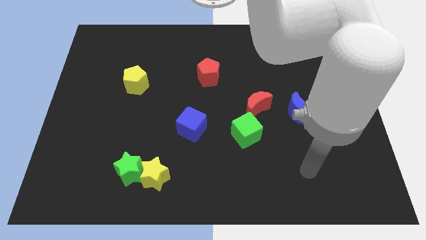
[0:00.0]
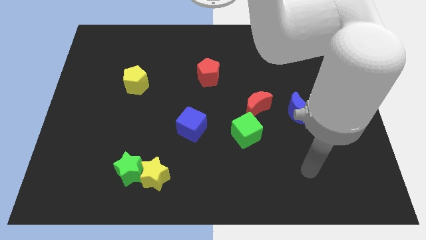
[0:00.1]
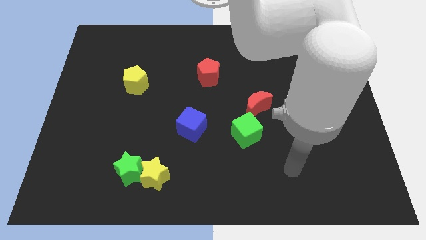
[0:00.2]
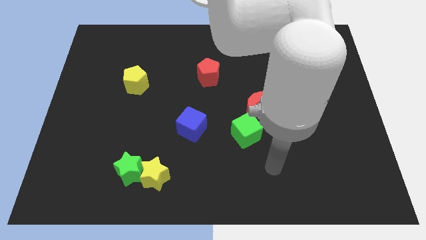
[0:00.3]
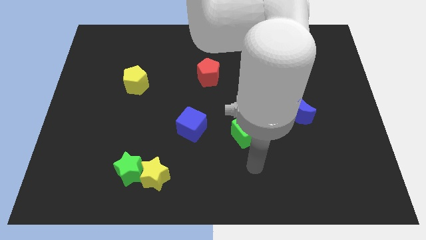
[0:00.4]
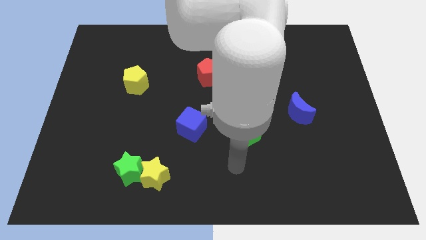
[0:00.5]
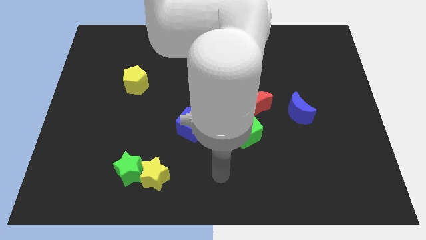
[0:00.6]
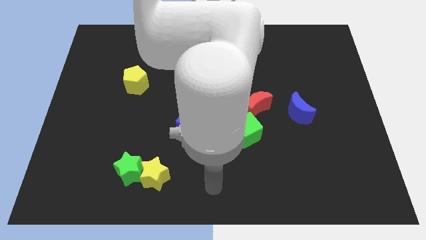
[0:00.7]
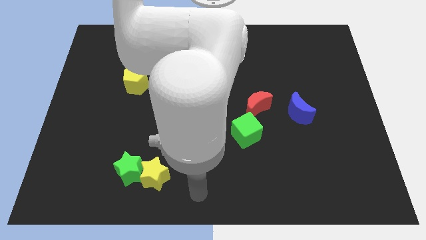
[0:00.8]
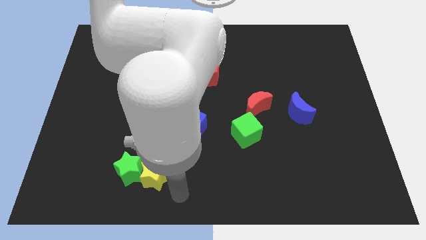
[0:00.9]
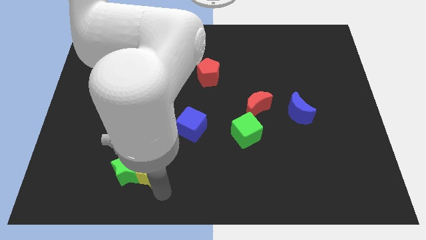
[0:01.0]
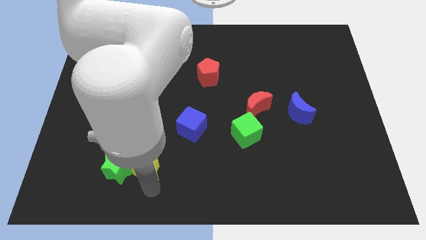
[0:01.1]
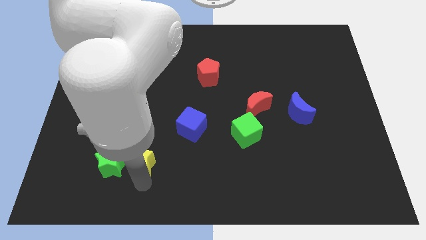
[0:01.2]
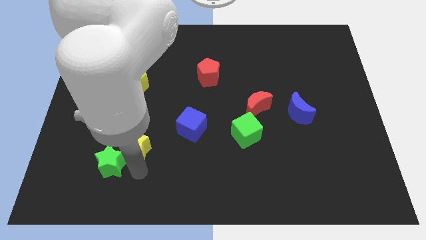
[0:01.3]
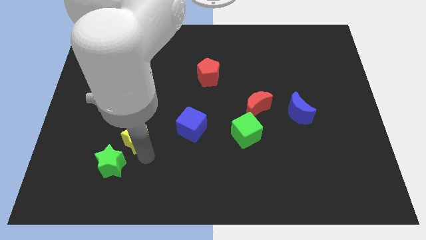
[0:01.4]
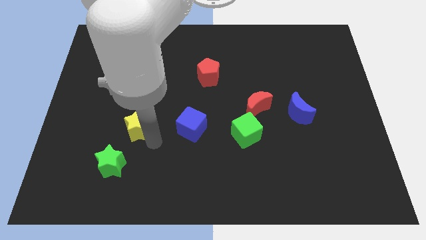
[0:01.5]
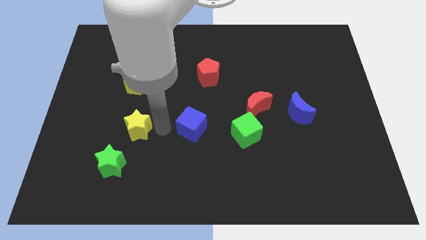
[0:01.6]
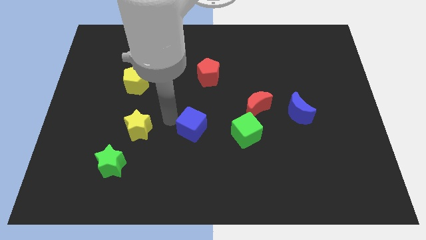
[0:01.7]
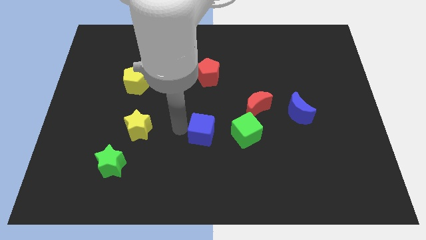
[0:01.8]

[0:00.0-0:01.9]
separate the yellow star from the green star

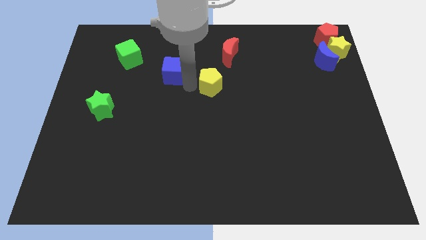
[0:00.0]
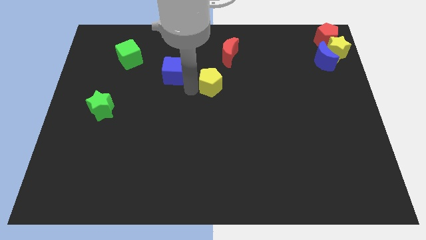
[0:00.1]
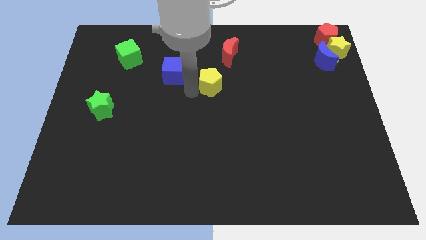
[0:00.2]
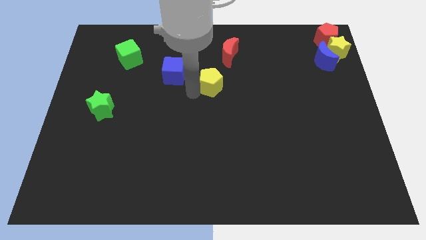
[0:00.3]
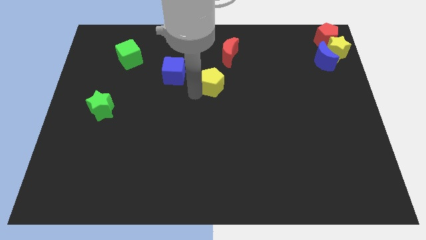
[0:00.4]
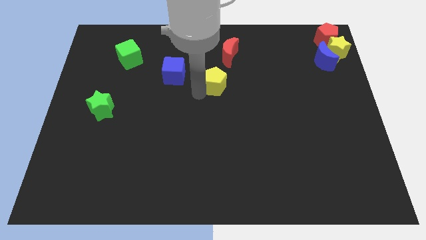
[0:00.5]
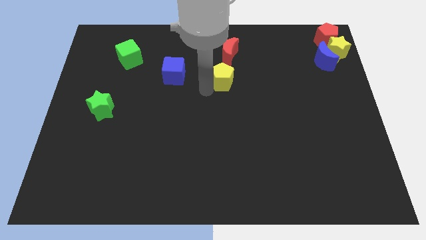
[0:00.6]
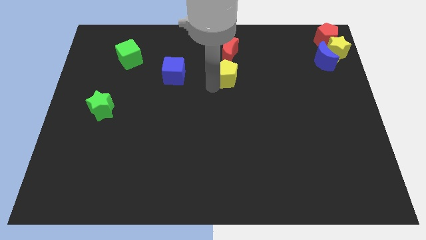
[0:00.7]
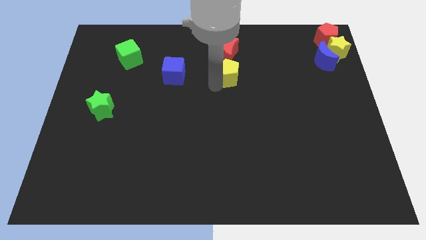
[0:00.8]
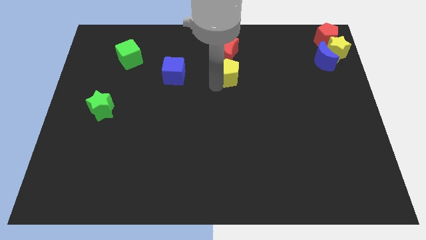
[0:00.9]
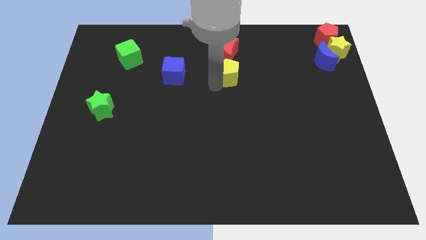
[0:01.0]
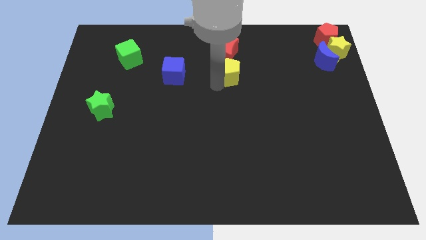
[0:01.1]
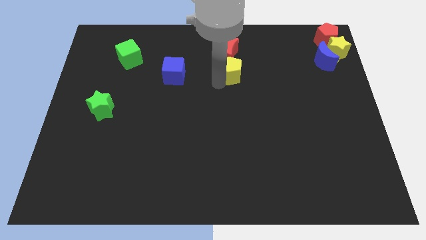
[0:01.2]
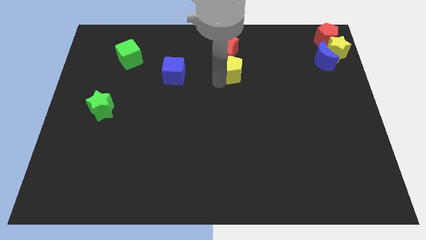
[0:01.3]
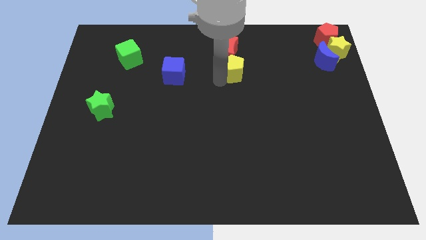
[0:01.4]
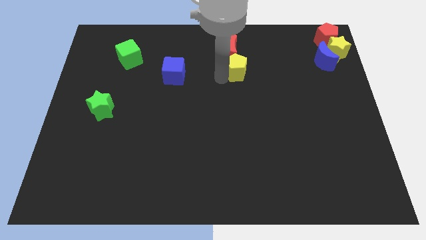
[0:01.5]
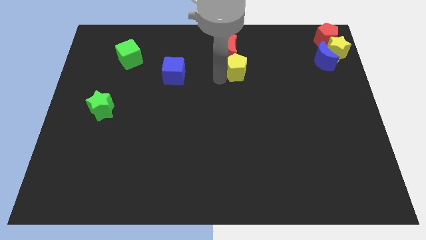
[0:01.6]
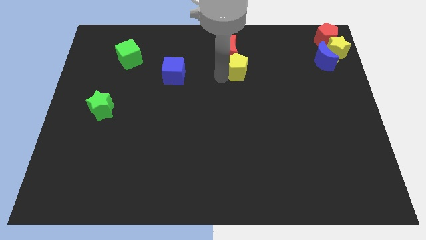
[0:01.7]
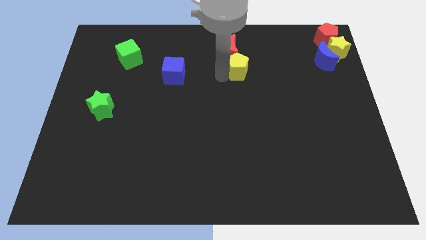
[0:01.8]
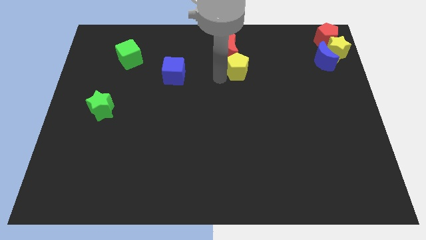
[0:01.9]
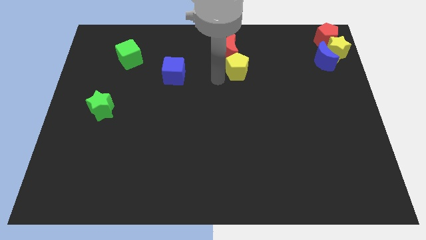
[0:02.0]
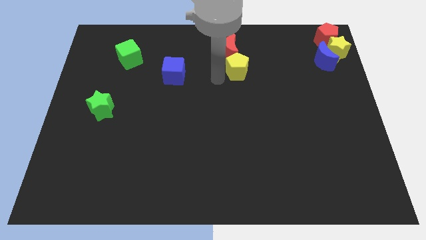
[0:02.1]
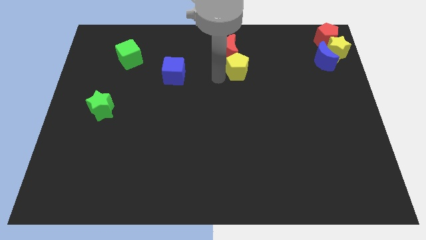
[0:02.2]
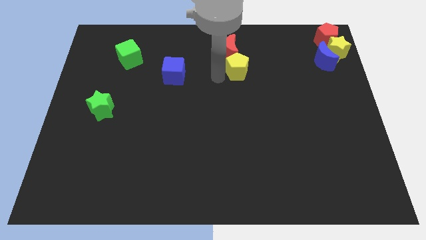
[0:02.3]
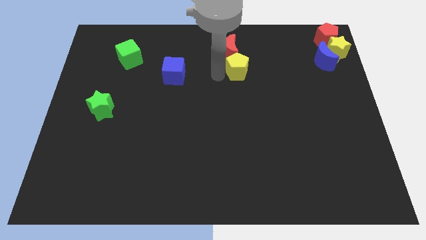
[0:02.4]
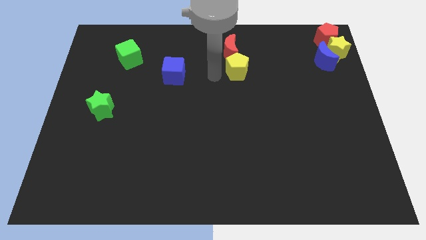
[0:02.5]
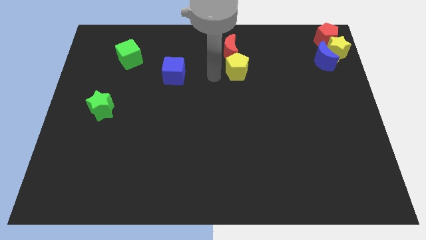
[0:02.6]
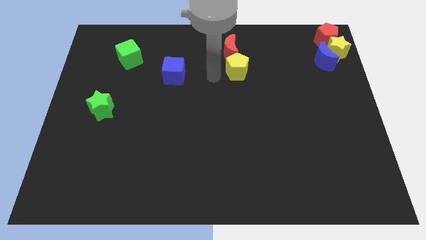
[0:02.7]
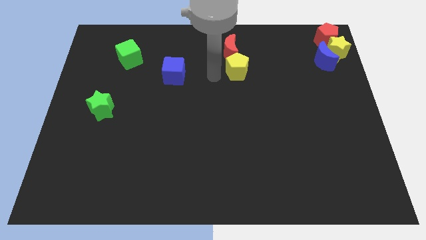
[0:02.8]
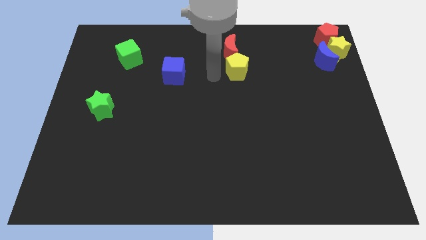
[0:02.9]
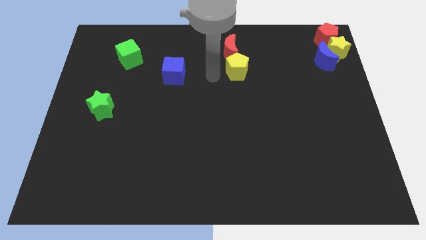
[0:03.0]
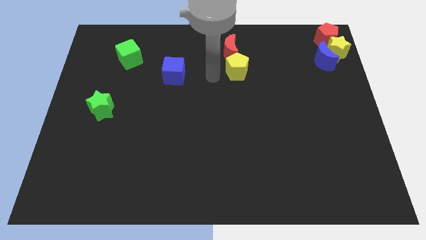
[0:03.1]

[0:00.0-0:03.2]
place the yellow pentagon below the red crescent

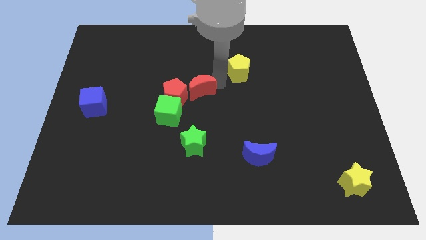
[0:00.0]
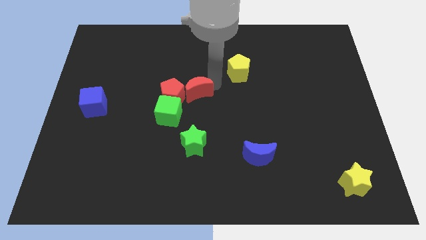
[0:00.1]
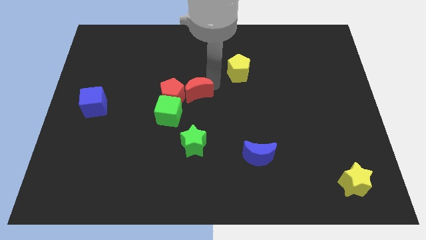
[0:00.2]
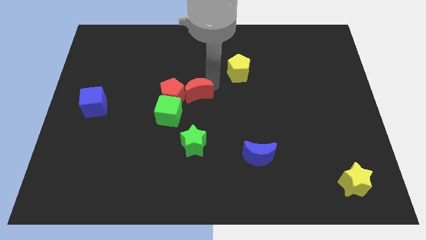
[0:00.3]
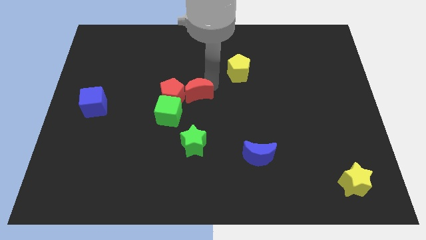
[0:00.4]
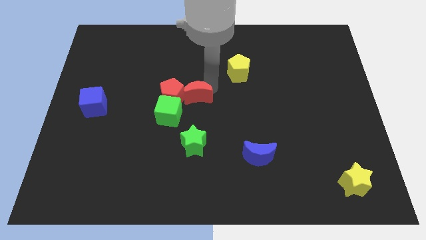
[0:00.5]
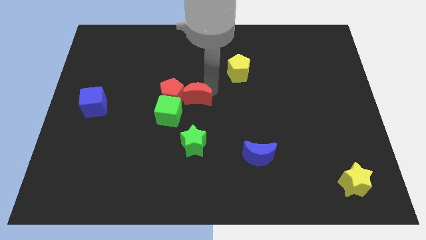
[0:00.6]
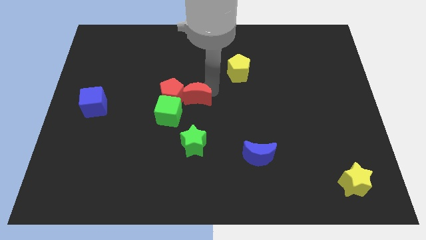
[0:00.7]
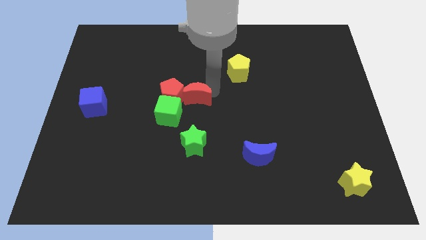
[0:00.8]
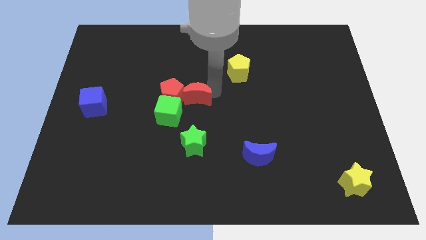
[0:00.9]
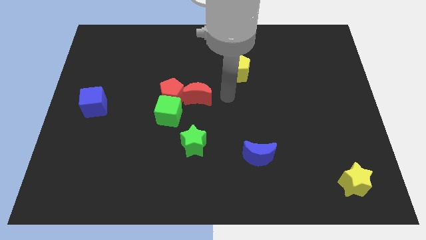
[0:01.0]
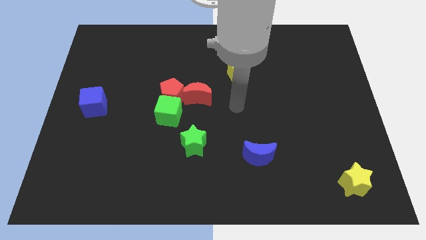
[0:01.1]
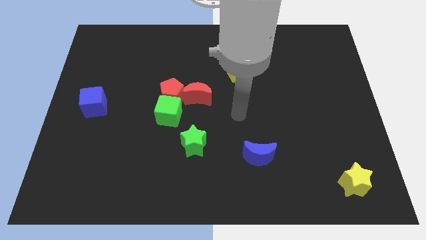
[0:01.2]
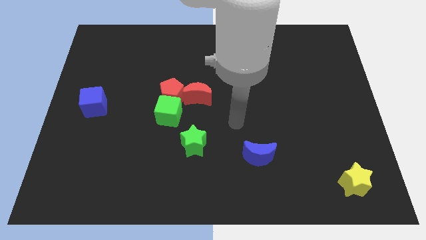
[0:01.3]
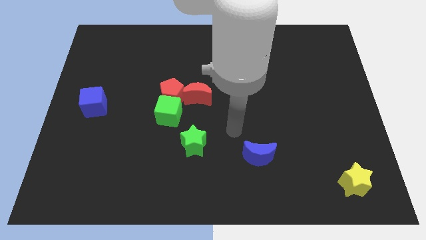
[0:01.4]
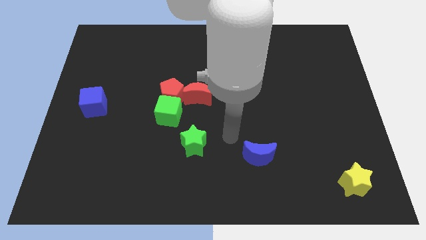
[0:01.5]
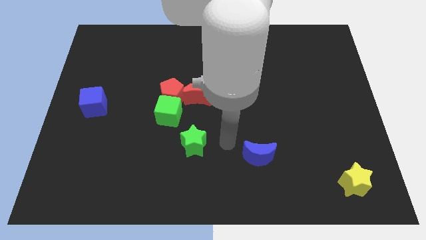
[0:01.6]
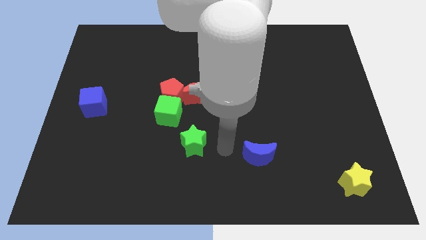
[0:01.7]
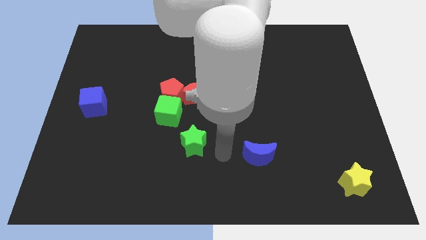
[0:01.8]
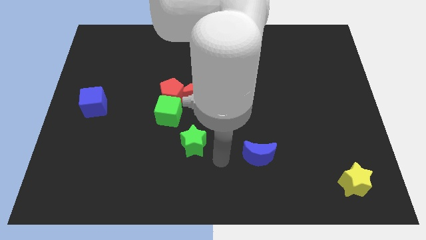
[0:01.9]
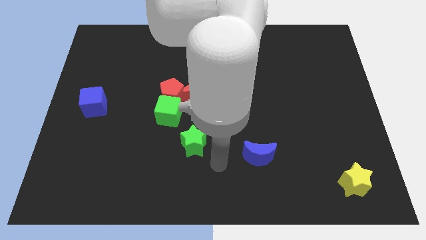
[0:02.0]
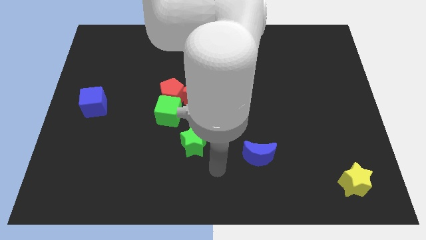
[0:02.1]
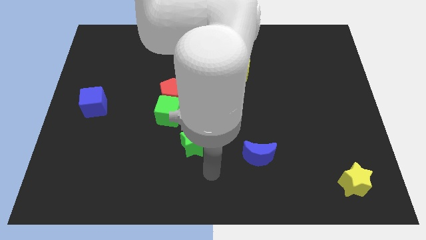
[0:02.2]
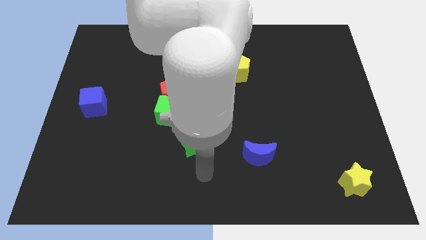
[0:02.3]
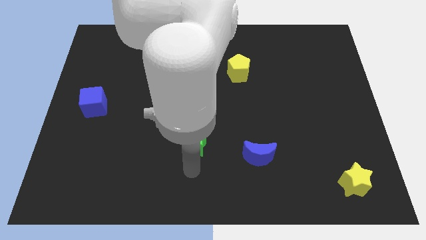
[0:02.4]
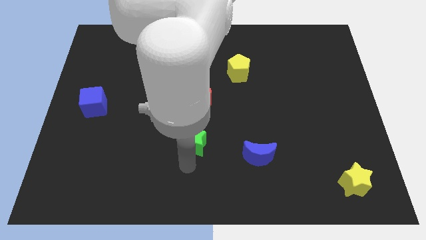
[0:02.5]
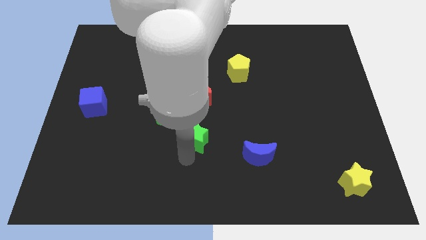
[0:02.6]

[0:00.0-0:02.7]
move your arm to the bottom center of the green star

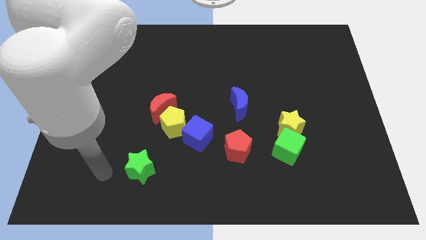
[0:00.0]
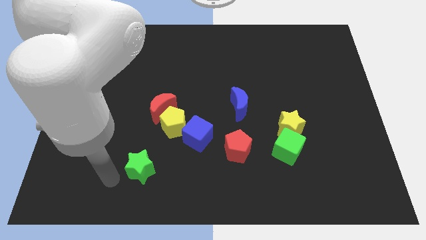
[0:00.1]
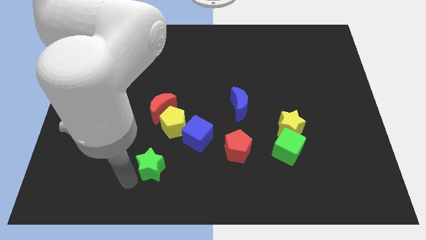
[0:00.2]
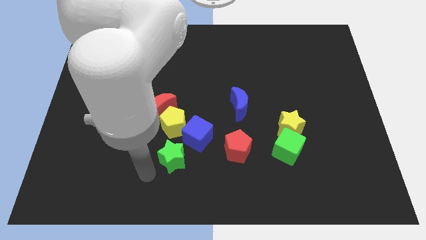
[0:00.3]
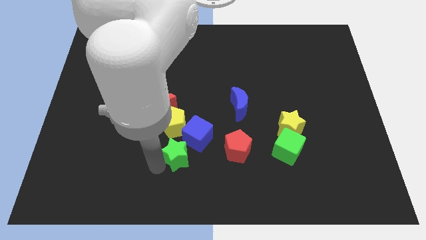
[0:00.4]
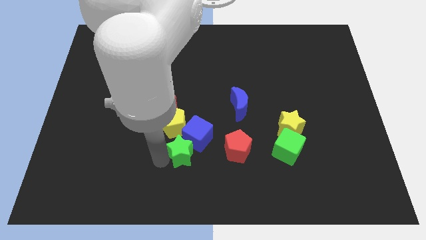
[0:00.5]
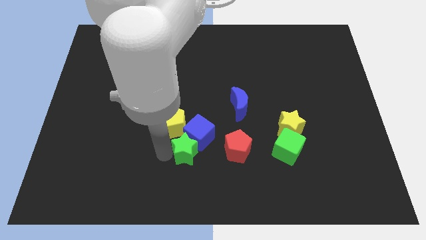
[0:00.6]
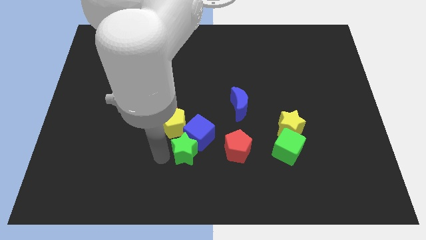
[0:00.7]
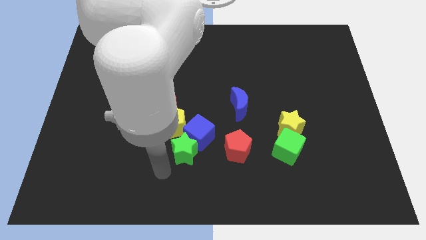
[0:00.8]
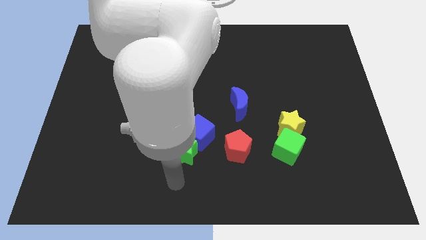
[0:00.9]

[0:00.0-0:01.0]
push the green star into the blue cube

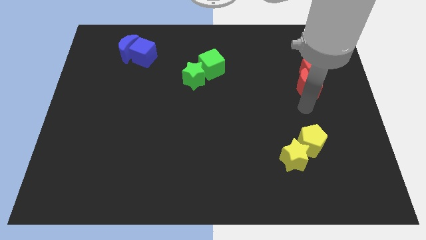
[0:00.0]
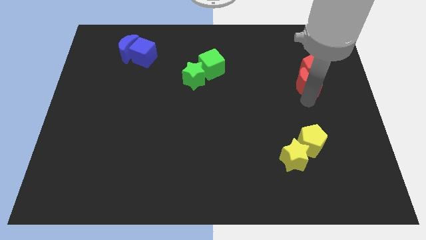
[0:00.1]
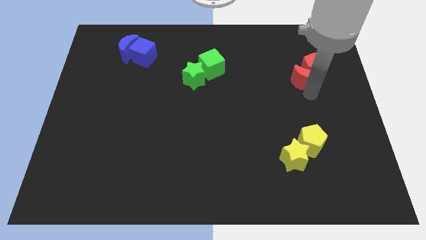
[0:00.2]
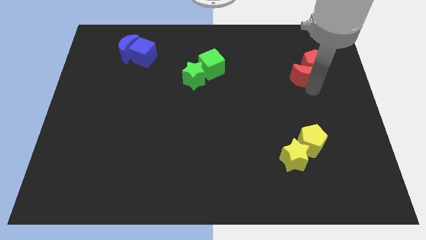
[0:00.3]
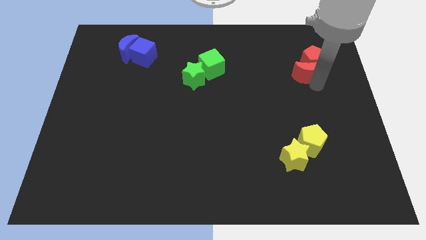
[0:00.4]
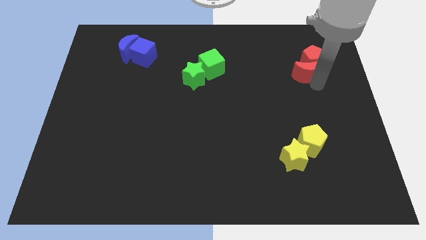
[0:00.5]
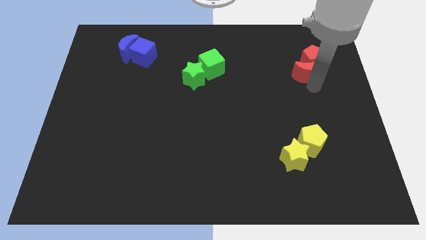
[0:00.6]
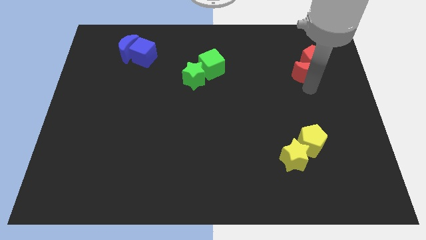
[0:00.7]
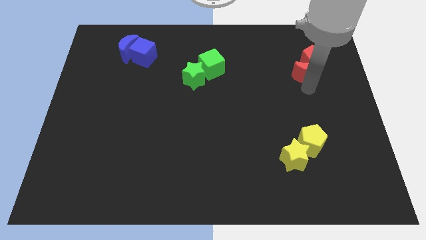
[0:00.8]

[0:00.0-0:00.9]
push the red blocks slightly to the top
